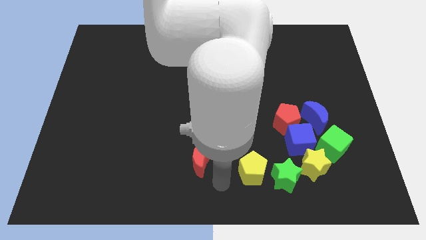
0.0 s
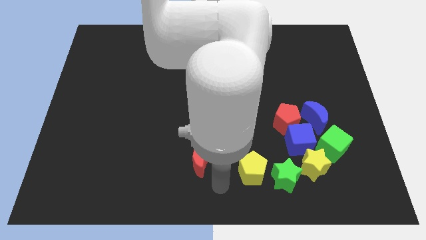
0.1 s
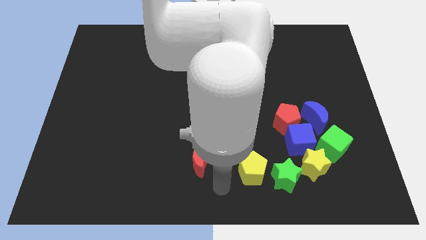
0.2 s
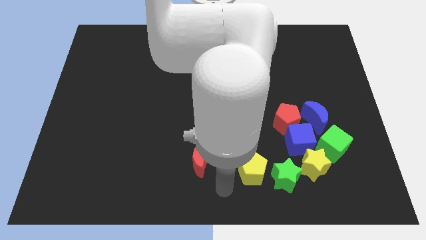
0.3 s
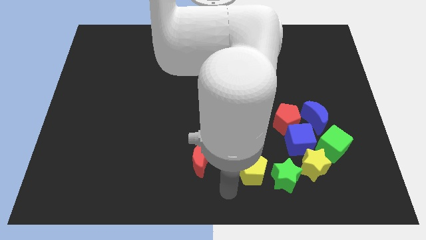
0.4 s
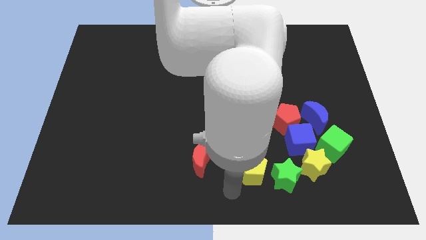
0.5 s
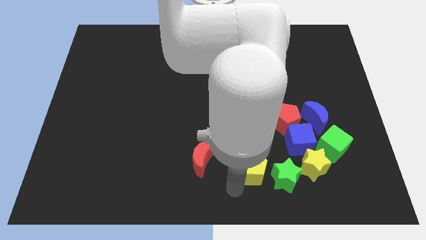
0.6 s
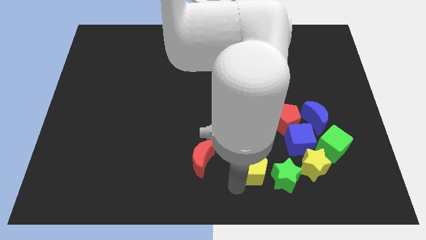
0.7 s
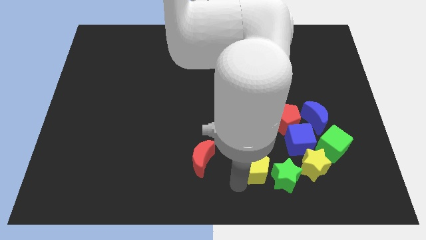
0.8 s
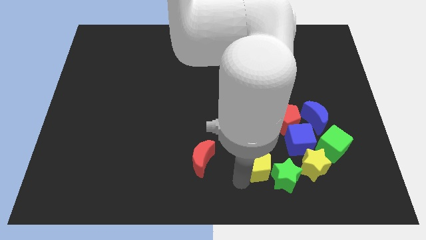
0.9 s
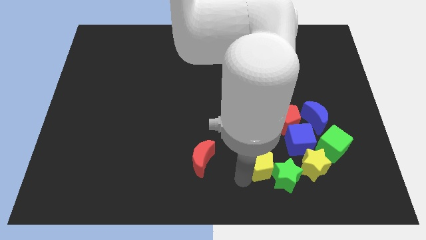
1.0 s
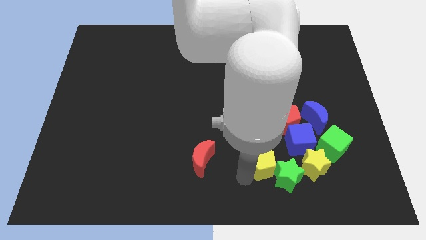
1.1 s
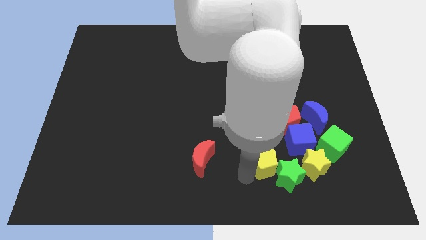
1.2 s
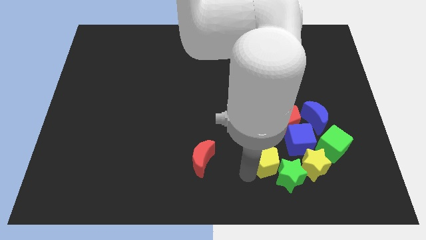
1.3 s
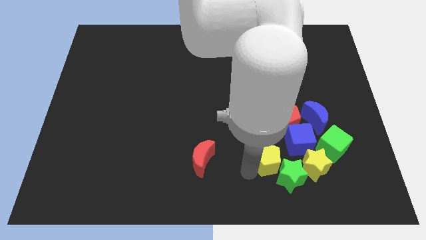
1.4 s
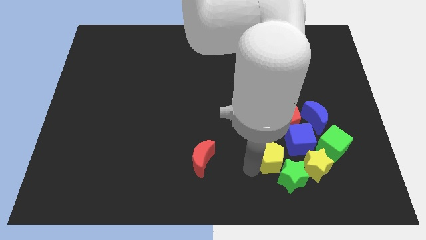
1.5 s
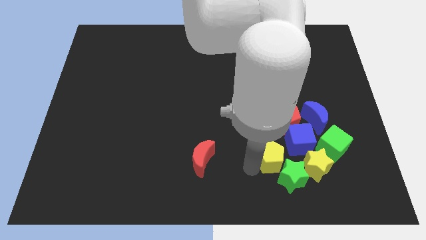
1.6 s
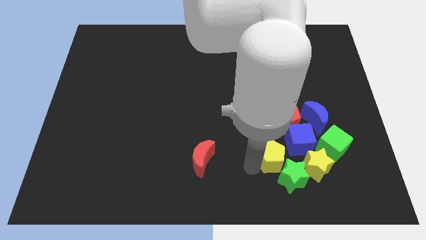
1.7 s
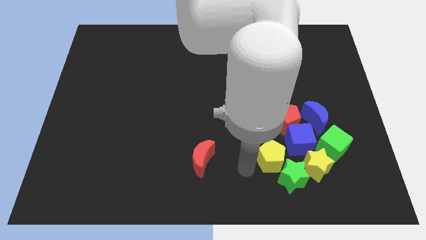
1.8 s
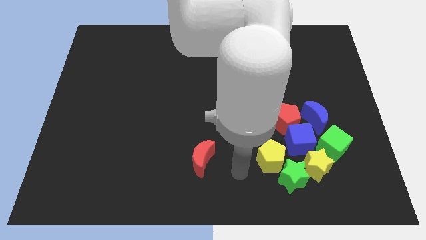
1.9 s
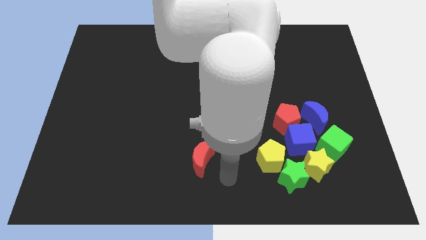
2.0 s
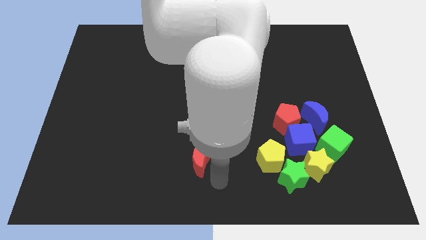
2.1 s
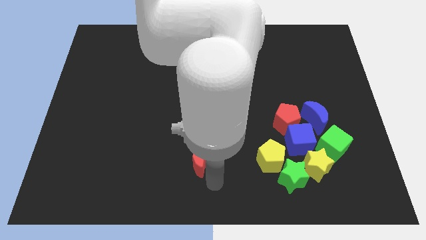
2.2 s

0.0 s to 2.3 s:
slide the yellow pentagon to top left of green star

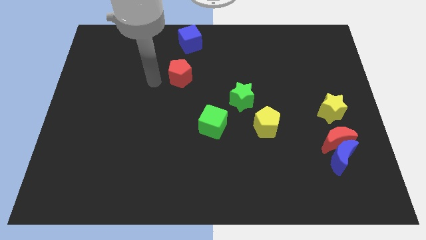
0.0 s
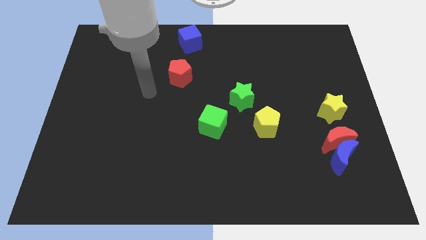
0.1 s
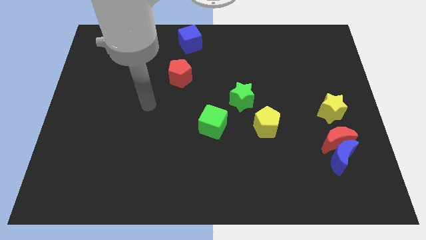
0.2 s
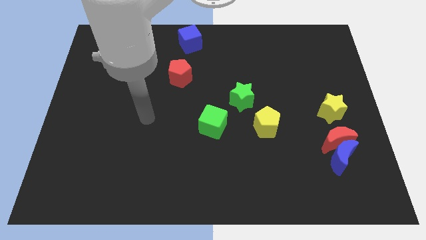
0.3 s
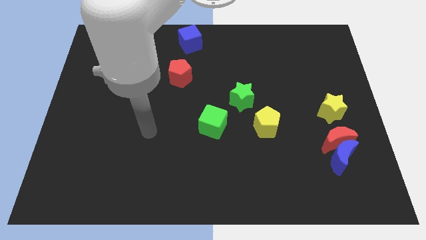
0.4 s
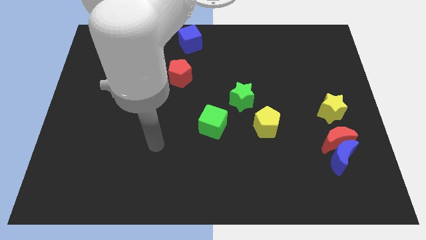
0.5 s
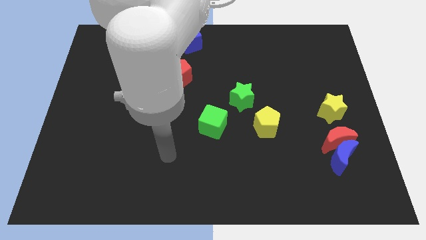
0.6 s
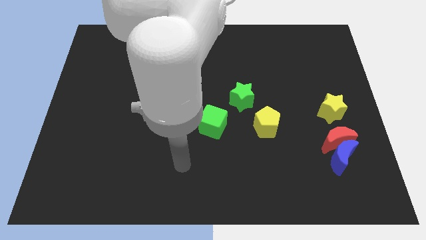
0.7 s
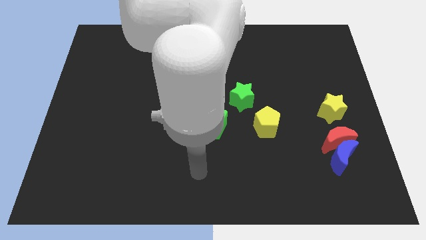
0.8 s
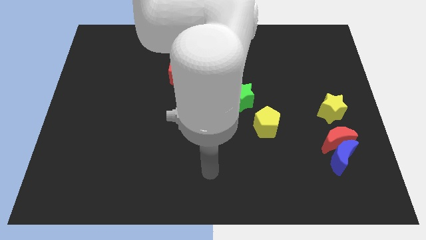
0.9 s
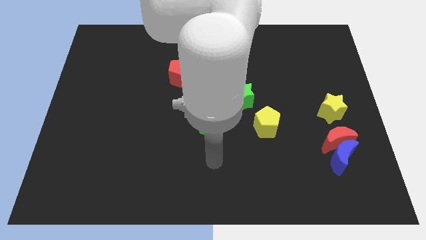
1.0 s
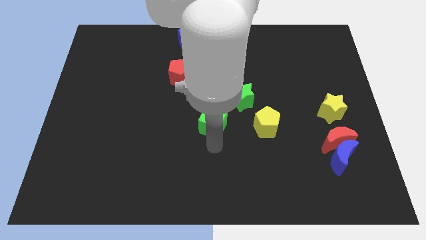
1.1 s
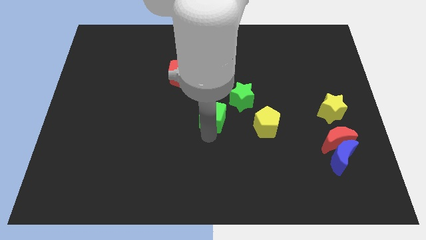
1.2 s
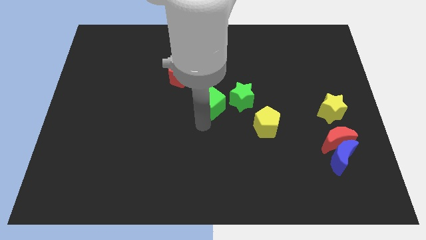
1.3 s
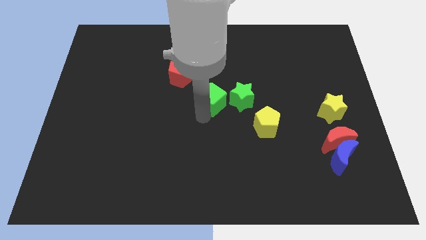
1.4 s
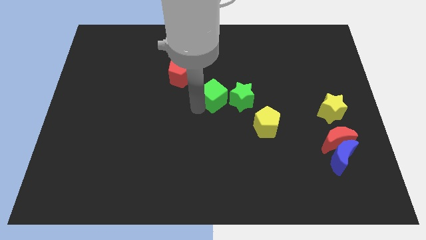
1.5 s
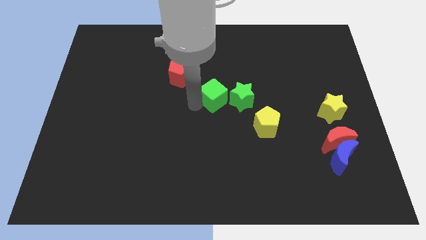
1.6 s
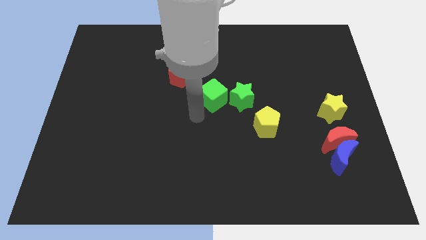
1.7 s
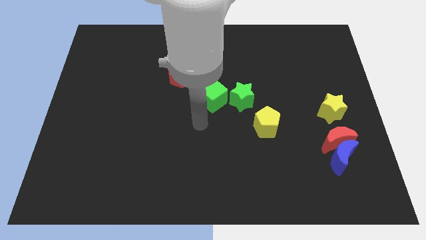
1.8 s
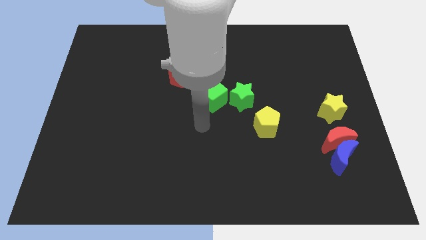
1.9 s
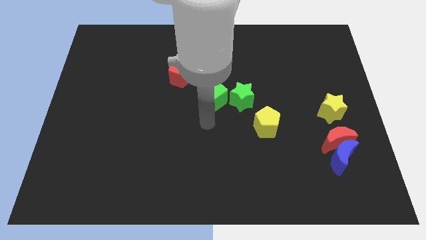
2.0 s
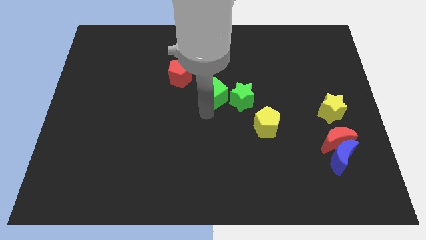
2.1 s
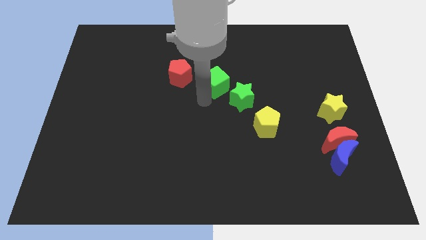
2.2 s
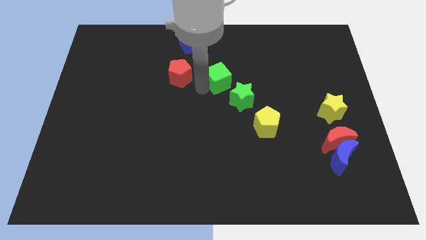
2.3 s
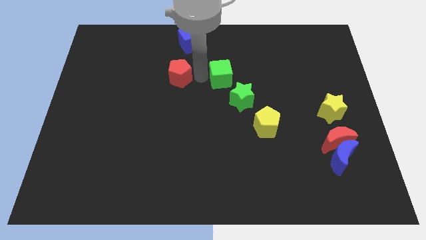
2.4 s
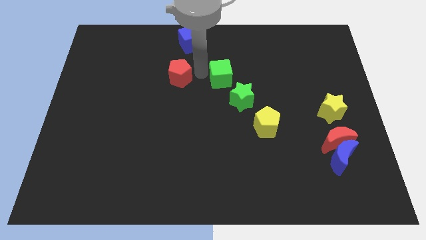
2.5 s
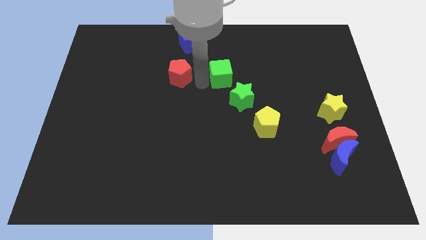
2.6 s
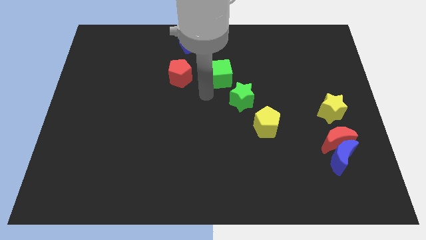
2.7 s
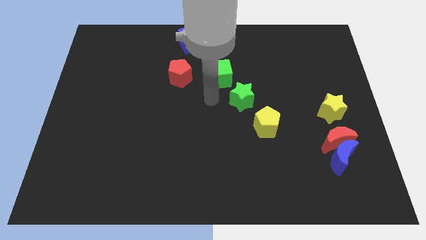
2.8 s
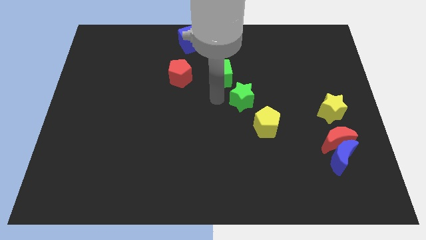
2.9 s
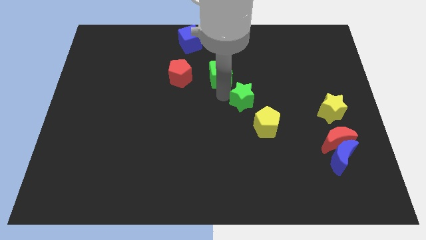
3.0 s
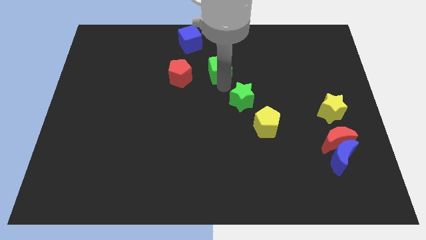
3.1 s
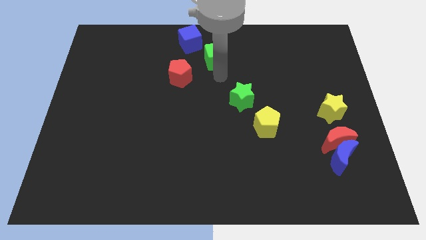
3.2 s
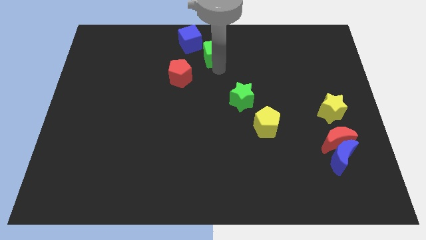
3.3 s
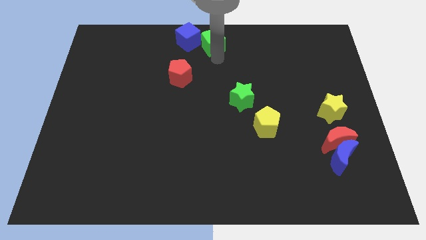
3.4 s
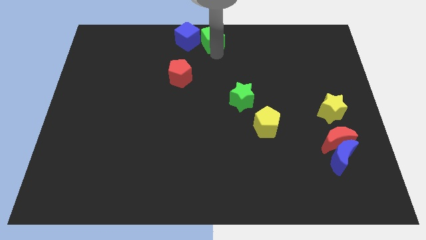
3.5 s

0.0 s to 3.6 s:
move the green cube closer right to the blue cube

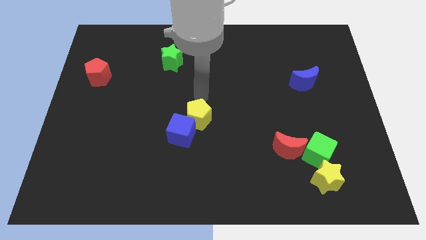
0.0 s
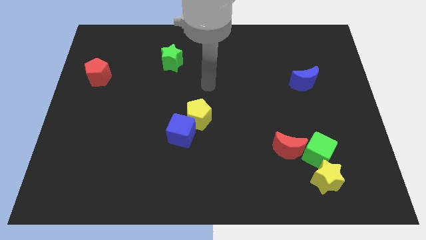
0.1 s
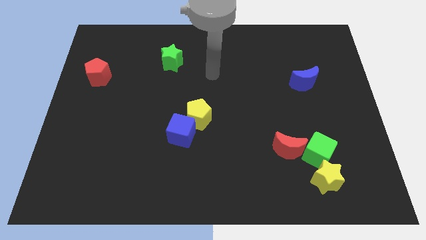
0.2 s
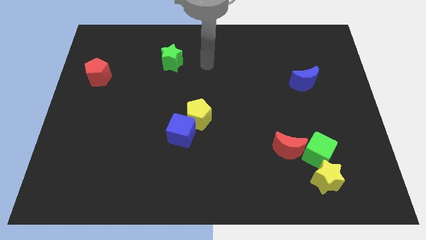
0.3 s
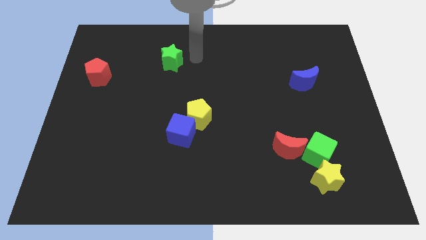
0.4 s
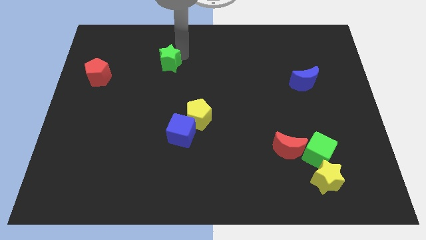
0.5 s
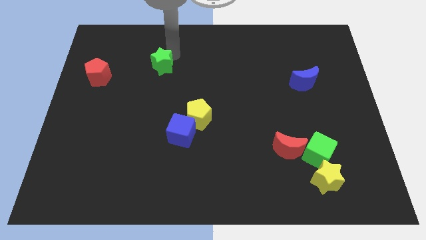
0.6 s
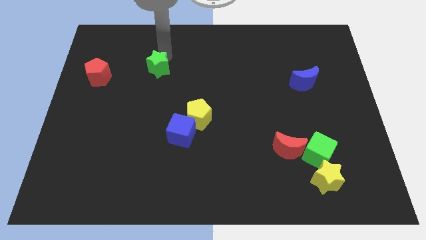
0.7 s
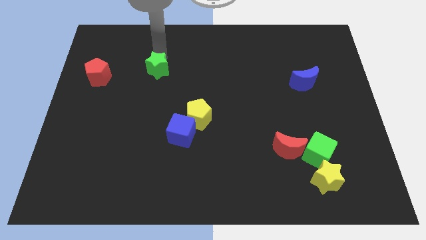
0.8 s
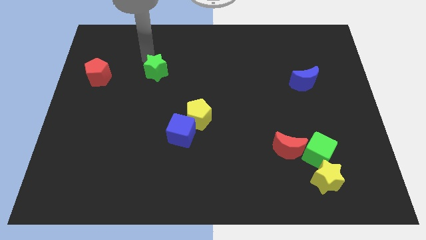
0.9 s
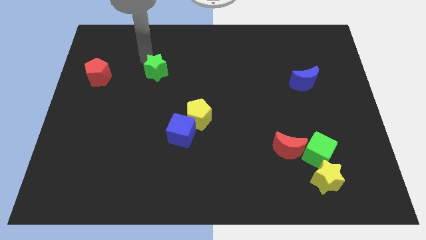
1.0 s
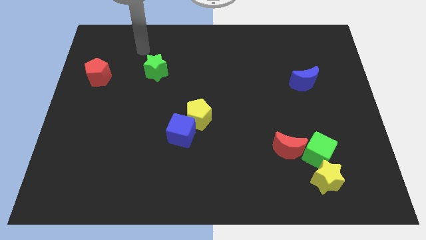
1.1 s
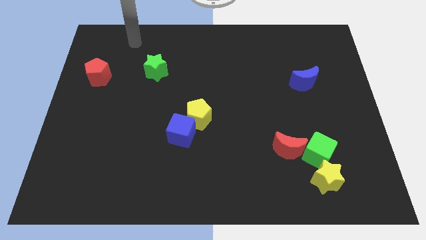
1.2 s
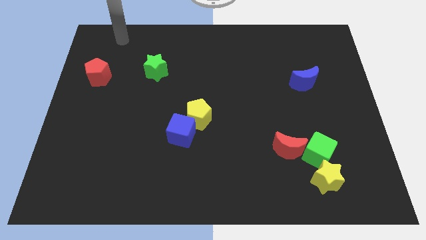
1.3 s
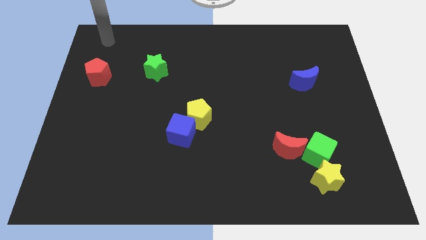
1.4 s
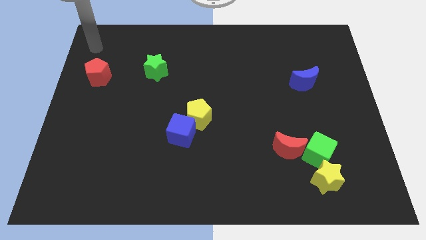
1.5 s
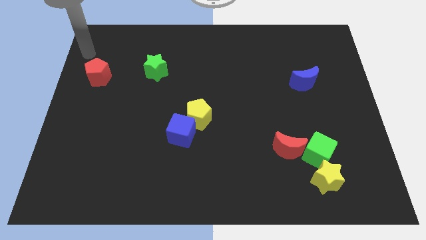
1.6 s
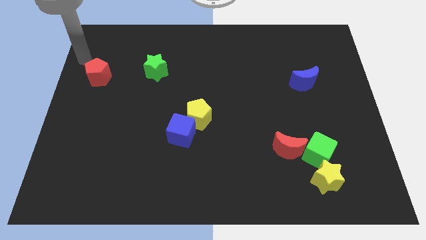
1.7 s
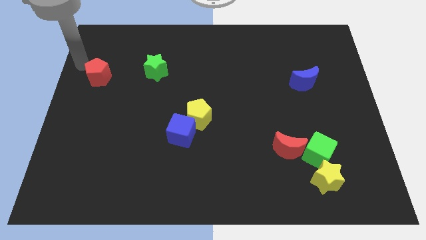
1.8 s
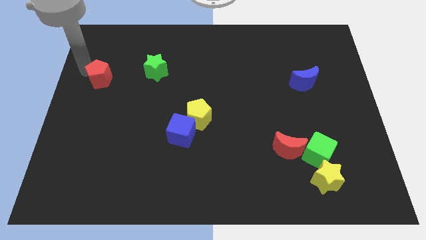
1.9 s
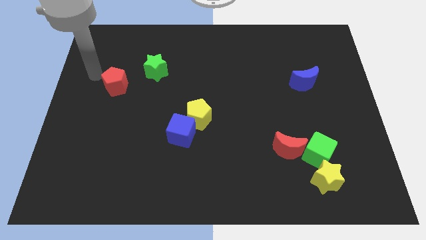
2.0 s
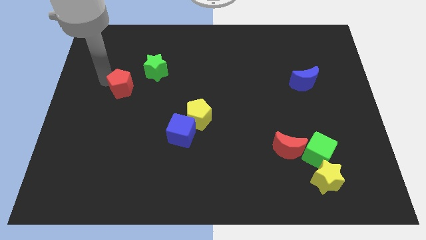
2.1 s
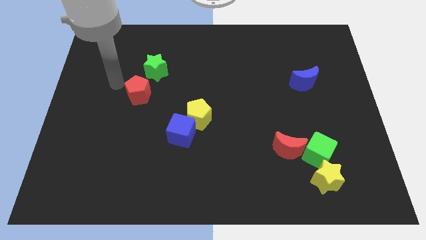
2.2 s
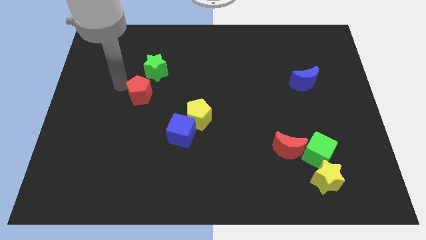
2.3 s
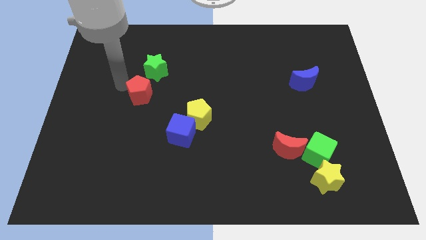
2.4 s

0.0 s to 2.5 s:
push the red pentagon diagonal to the blue cube

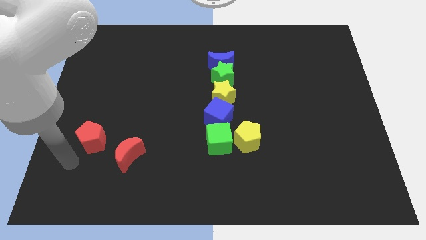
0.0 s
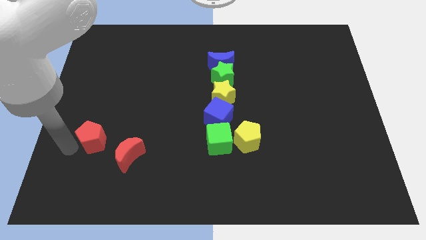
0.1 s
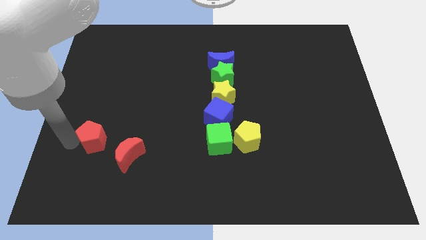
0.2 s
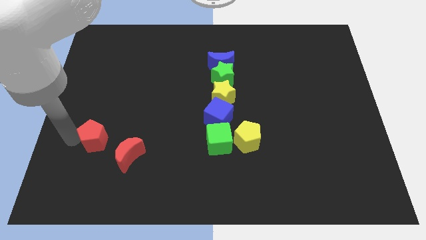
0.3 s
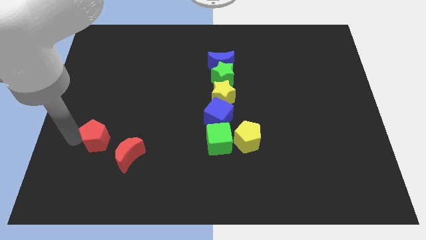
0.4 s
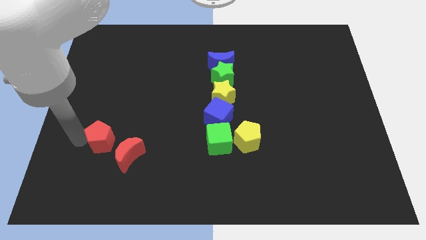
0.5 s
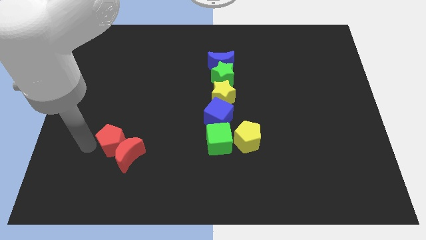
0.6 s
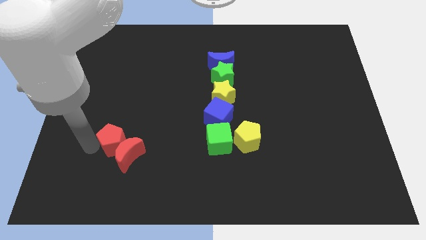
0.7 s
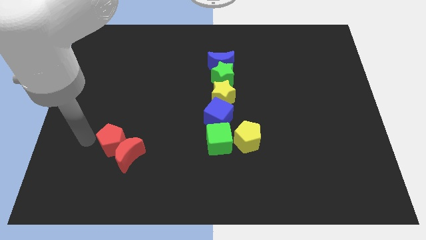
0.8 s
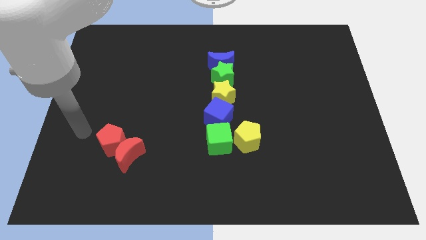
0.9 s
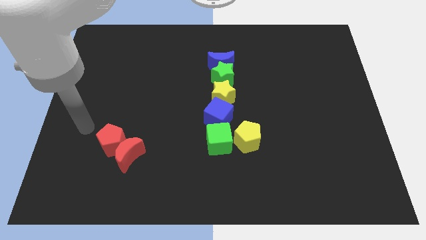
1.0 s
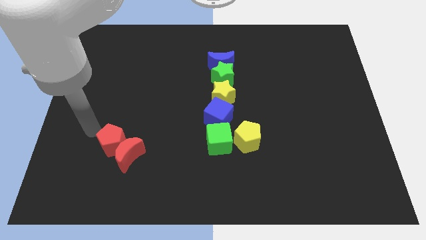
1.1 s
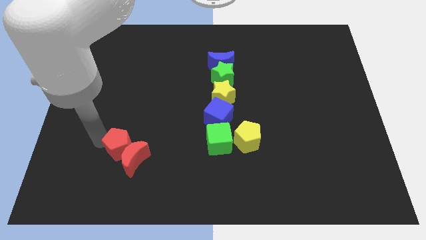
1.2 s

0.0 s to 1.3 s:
push the red pentagon close to red crescent
